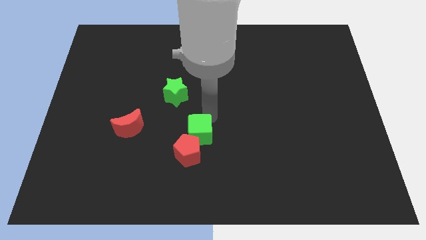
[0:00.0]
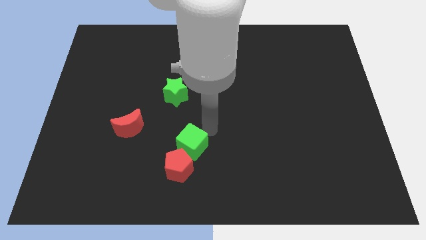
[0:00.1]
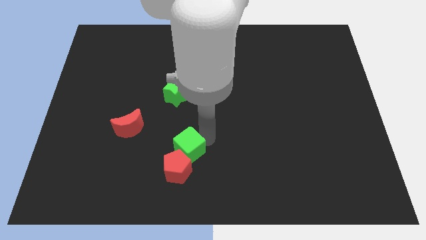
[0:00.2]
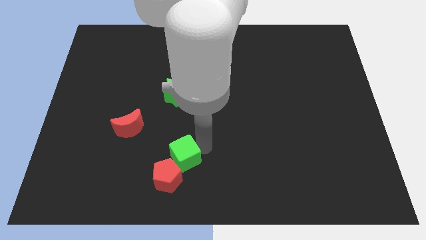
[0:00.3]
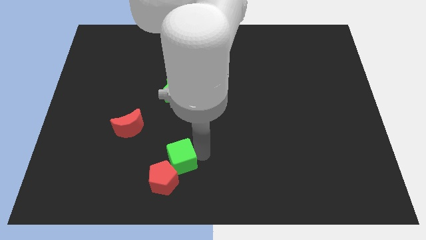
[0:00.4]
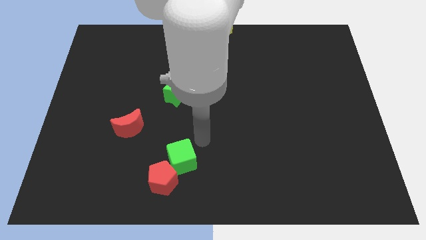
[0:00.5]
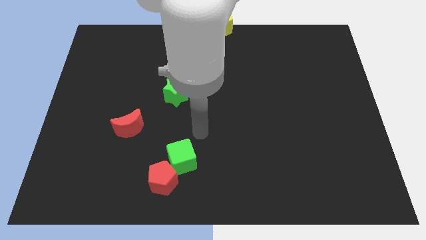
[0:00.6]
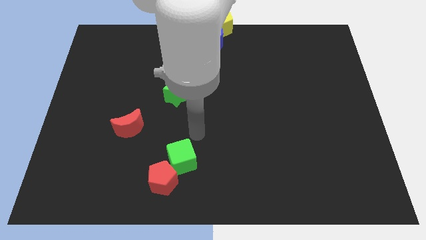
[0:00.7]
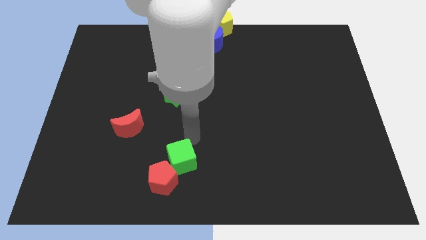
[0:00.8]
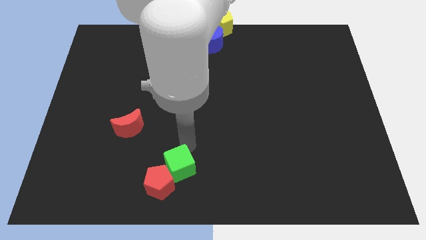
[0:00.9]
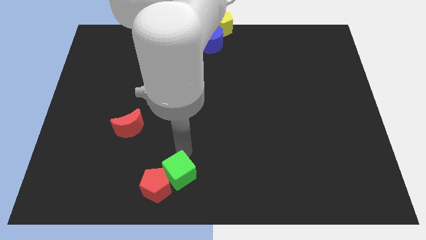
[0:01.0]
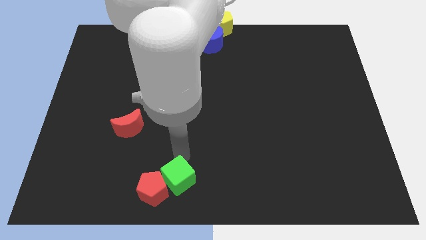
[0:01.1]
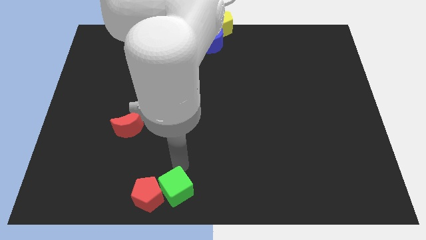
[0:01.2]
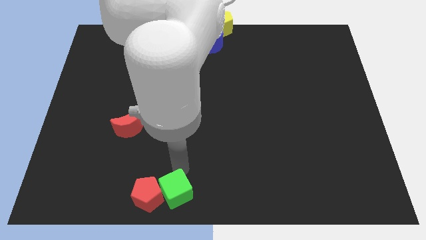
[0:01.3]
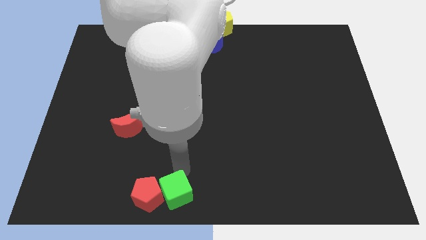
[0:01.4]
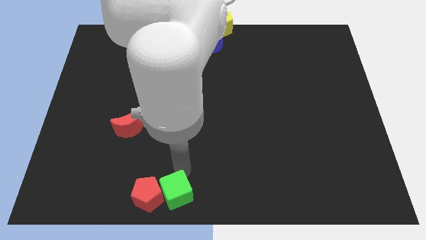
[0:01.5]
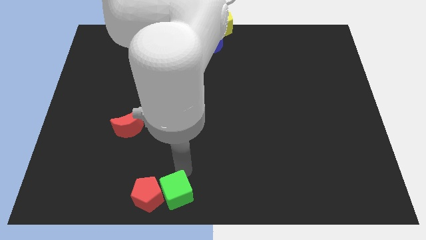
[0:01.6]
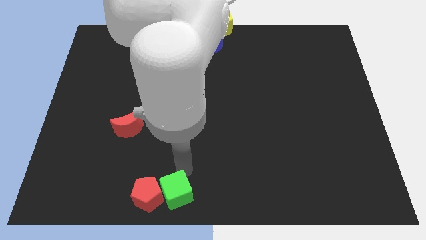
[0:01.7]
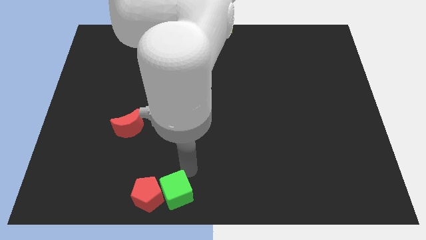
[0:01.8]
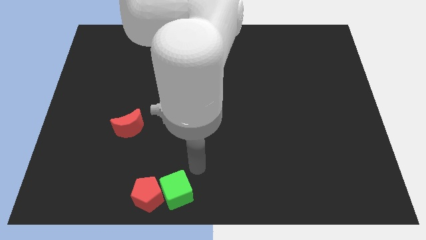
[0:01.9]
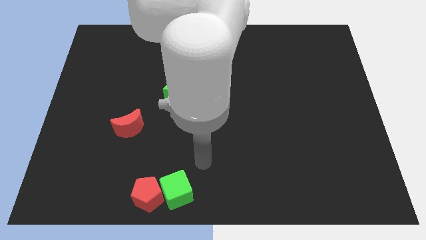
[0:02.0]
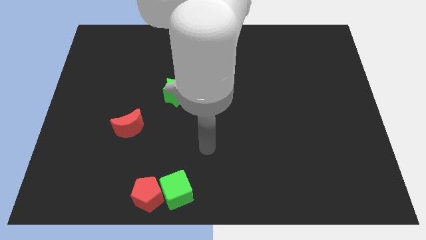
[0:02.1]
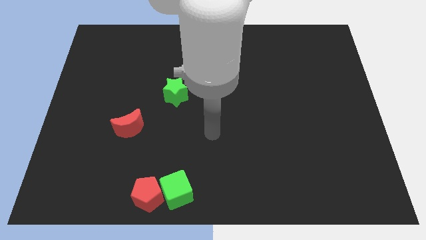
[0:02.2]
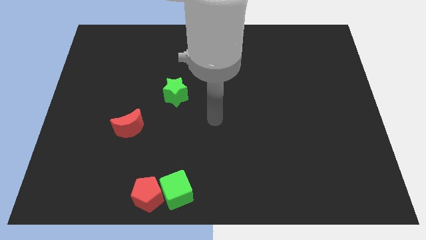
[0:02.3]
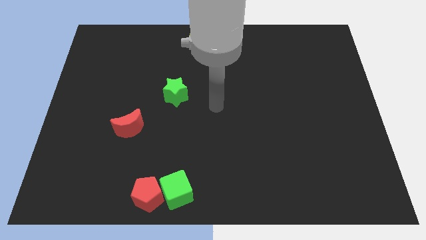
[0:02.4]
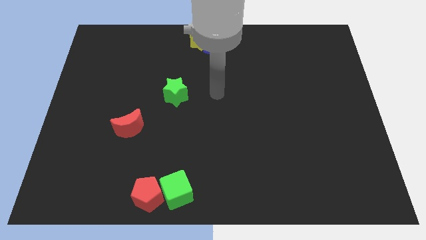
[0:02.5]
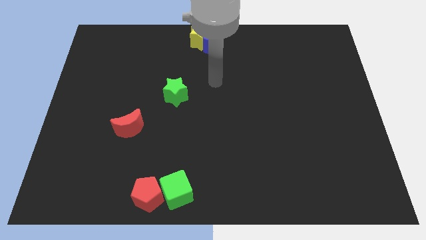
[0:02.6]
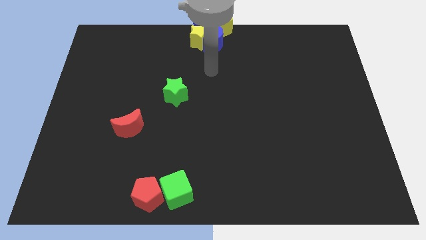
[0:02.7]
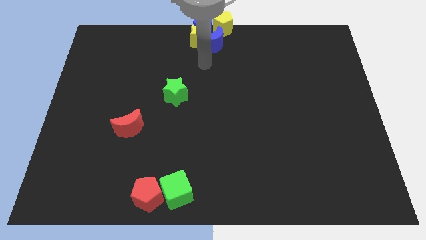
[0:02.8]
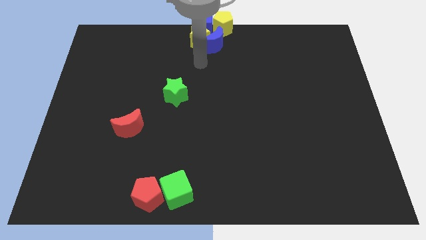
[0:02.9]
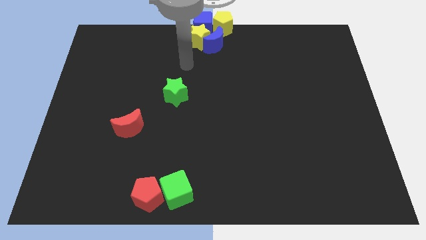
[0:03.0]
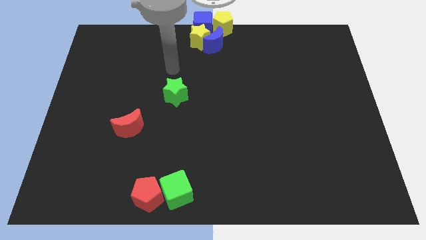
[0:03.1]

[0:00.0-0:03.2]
place the green cube and the red pentagon at the bottom of the board

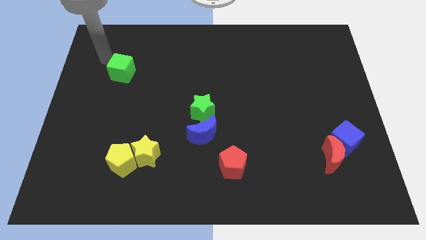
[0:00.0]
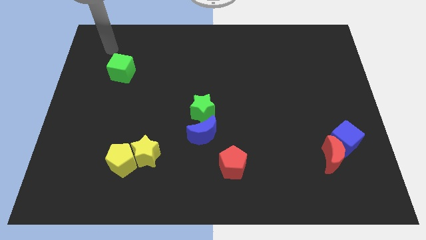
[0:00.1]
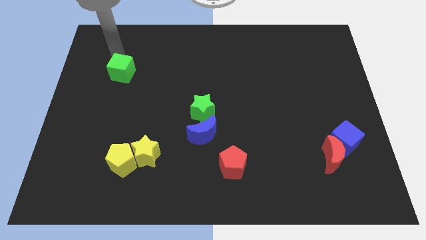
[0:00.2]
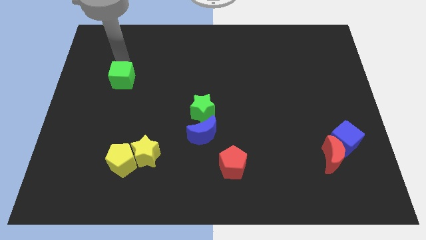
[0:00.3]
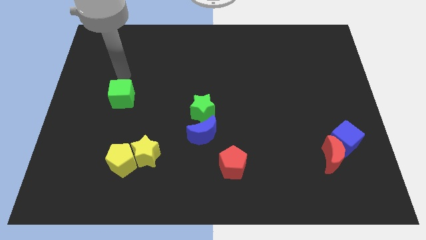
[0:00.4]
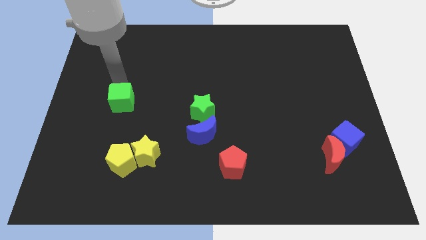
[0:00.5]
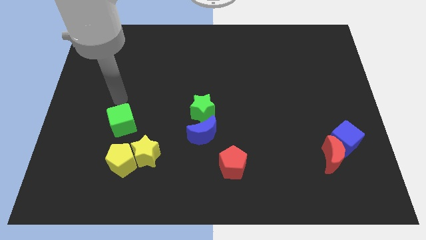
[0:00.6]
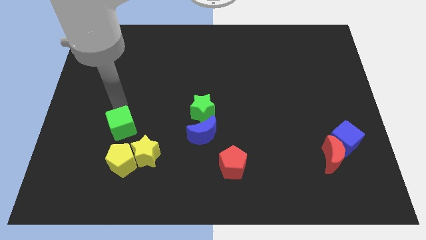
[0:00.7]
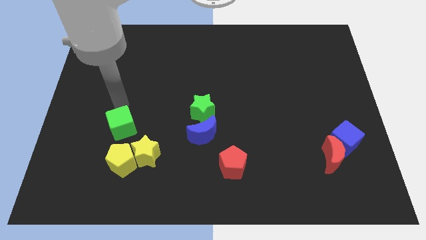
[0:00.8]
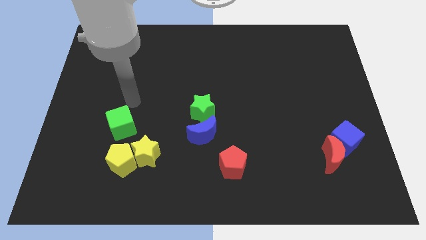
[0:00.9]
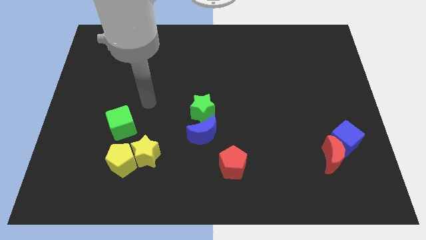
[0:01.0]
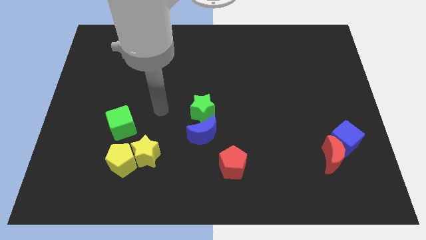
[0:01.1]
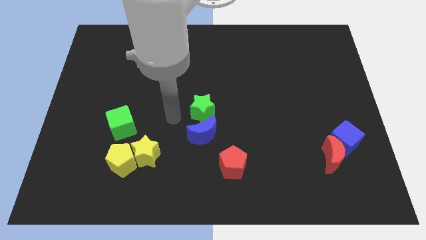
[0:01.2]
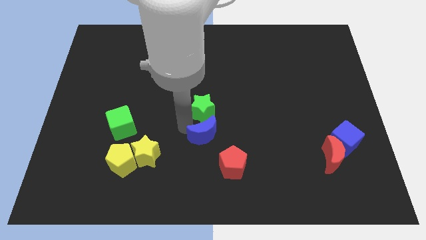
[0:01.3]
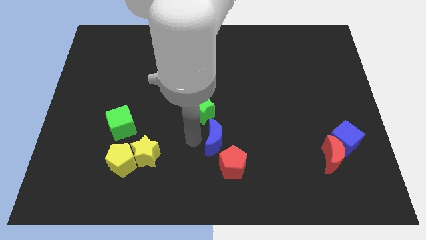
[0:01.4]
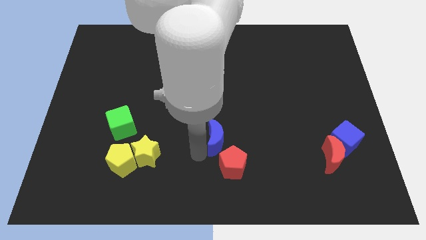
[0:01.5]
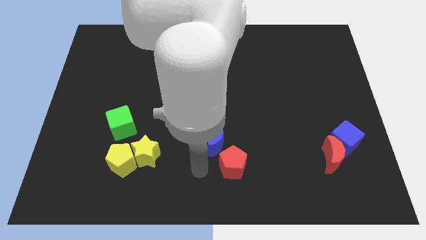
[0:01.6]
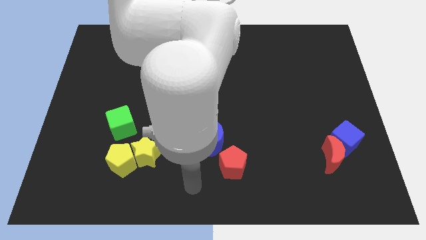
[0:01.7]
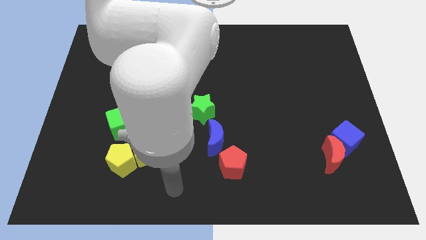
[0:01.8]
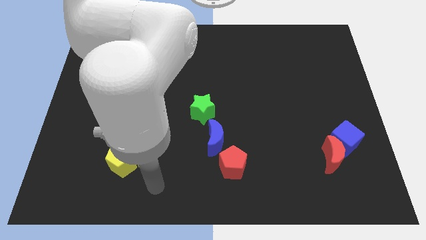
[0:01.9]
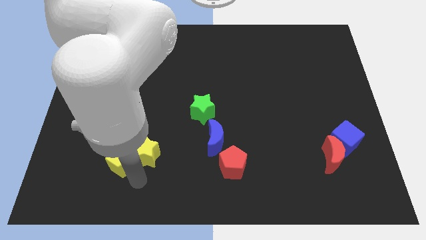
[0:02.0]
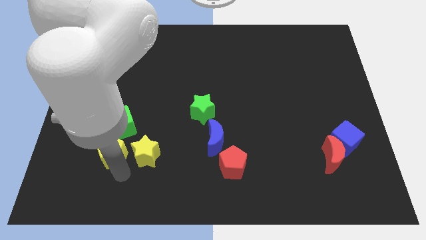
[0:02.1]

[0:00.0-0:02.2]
move the green cube to the top of the yellow pentagon

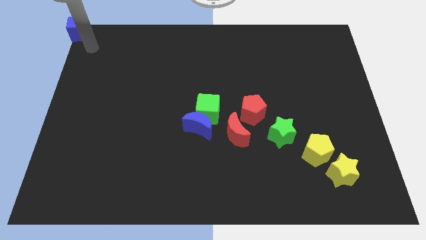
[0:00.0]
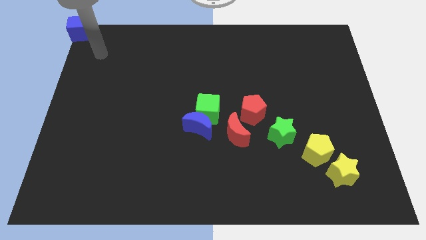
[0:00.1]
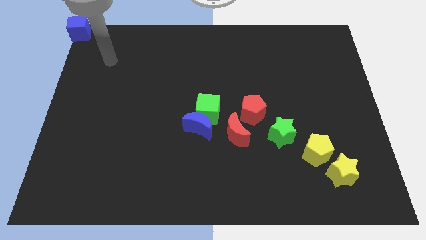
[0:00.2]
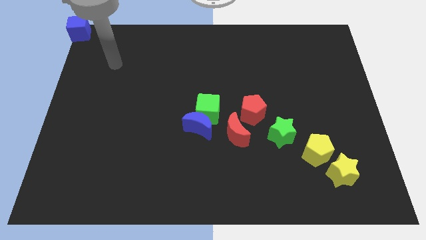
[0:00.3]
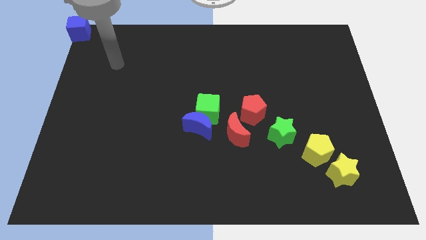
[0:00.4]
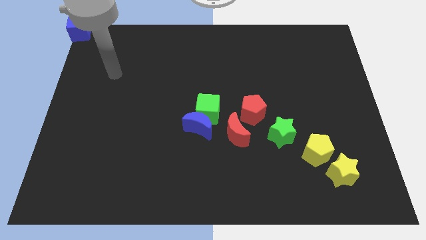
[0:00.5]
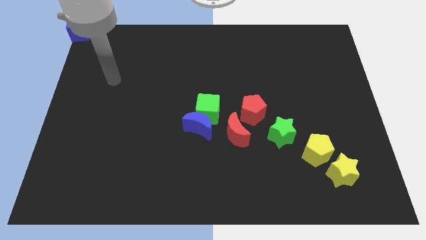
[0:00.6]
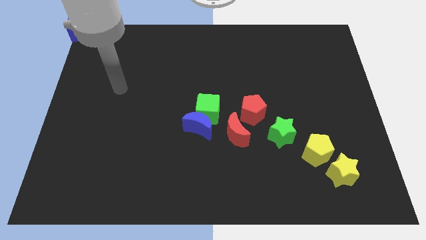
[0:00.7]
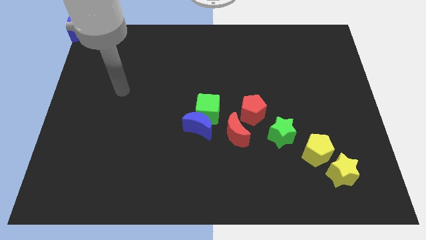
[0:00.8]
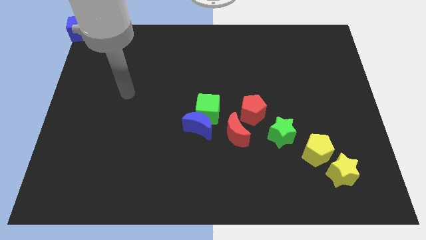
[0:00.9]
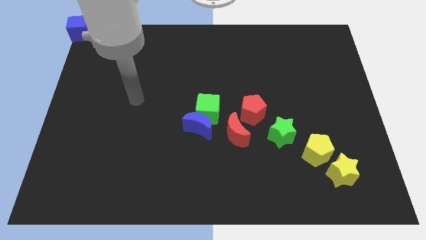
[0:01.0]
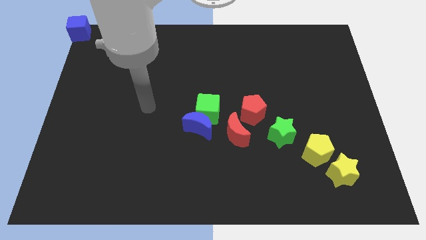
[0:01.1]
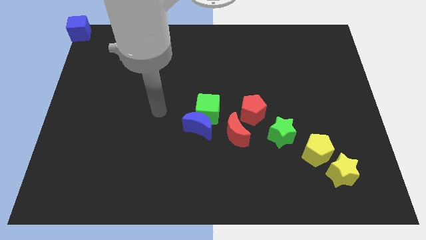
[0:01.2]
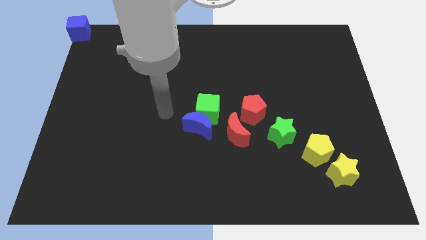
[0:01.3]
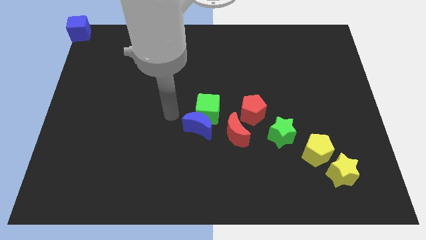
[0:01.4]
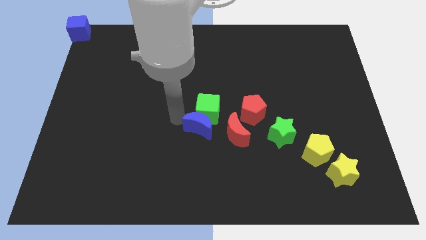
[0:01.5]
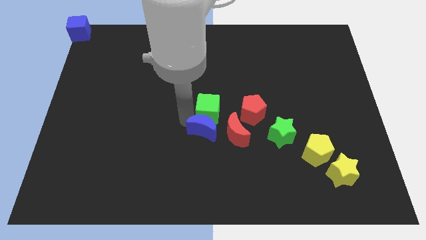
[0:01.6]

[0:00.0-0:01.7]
move the arm left to the blue moon

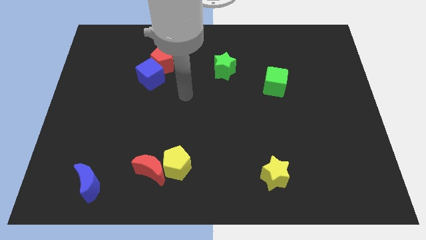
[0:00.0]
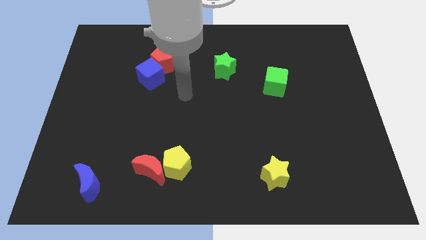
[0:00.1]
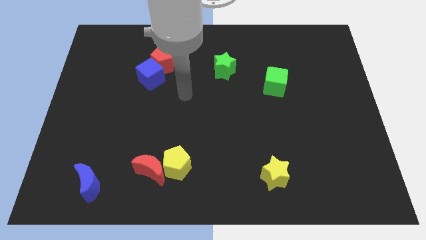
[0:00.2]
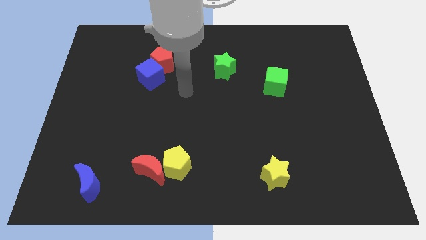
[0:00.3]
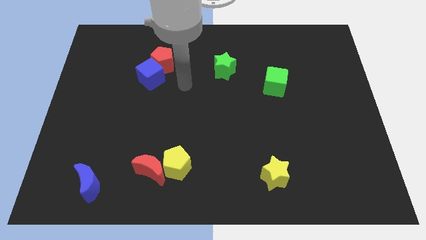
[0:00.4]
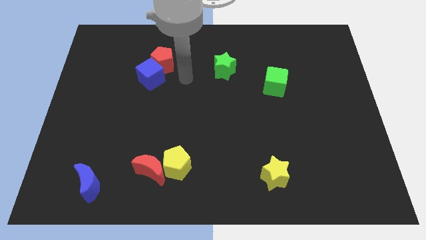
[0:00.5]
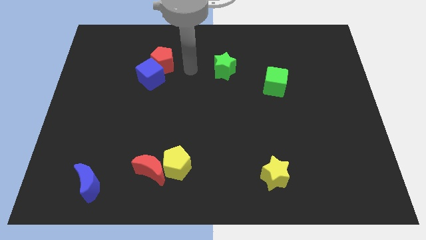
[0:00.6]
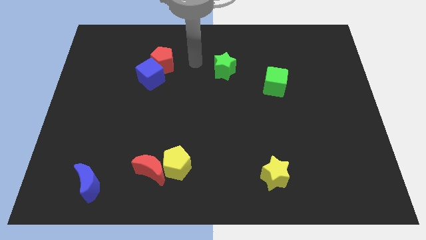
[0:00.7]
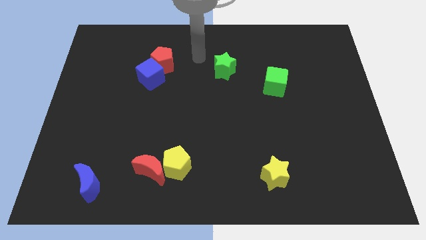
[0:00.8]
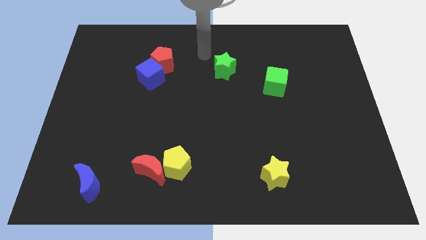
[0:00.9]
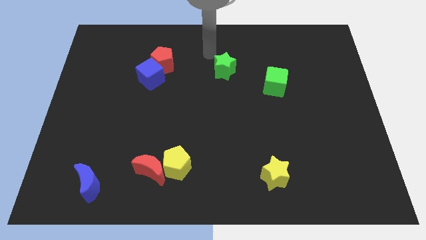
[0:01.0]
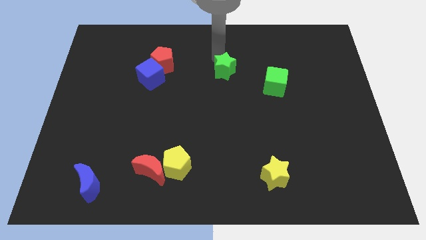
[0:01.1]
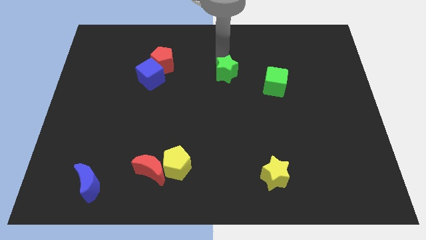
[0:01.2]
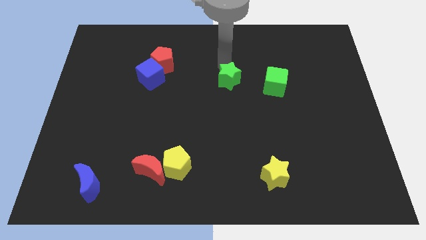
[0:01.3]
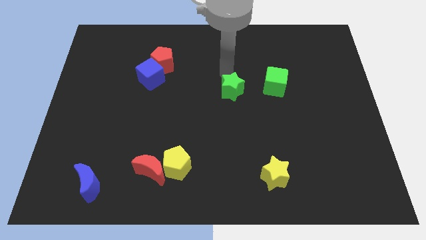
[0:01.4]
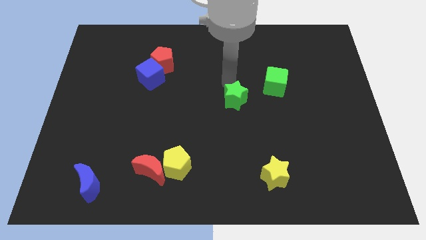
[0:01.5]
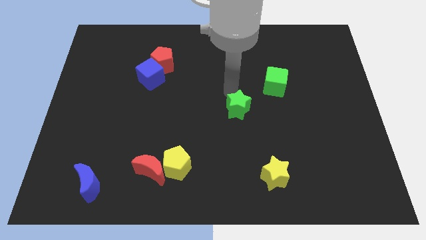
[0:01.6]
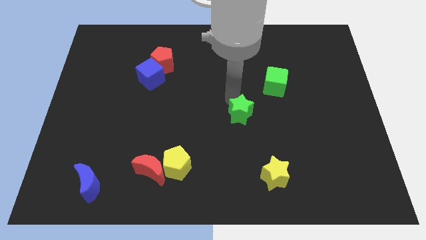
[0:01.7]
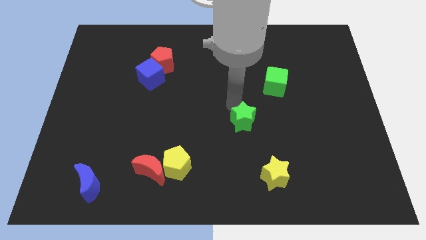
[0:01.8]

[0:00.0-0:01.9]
push the green star towards the center of the board
